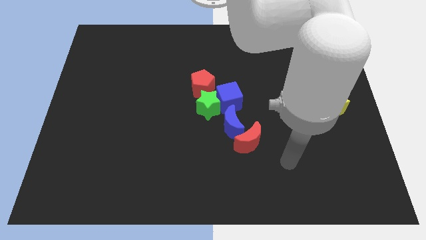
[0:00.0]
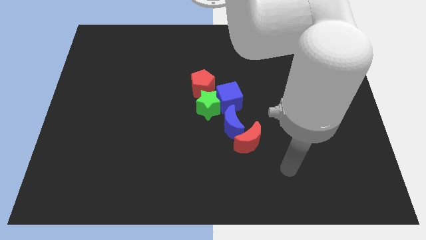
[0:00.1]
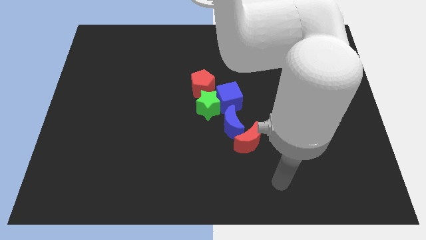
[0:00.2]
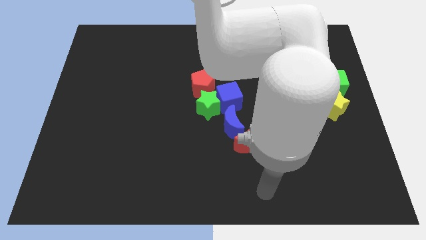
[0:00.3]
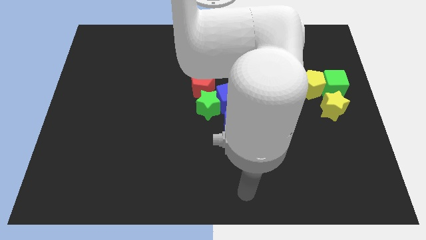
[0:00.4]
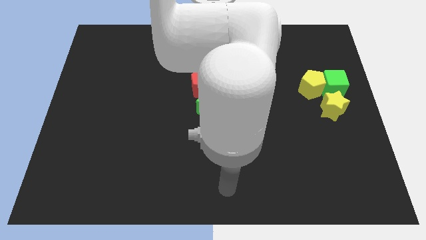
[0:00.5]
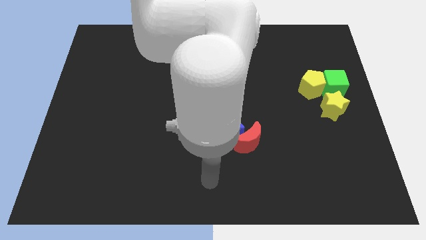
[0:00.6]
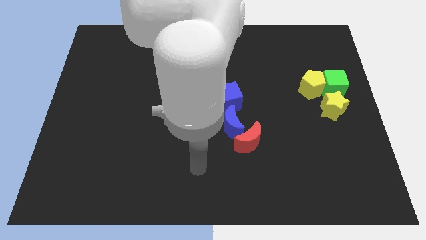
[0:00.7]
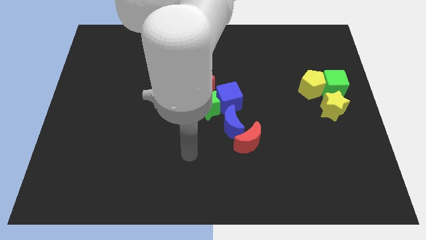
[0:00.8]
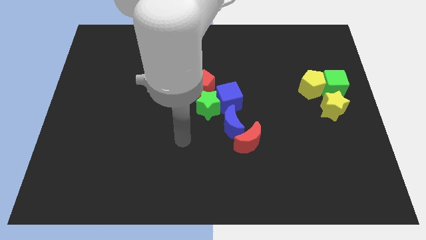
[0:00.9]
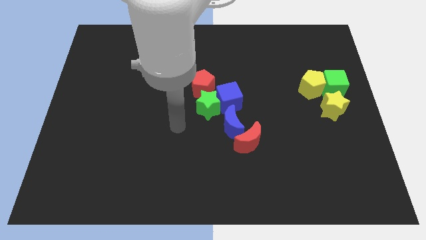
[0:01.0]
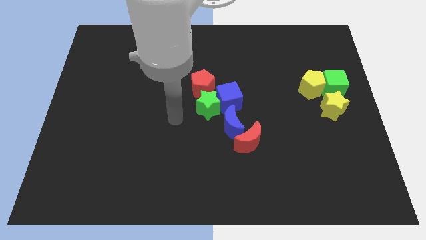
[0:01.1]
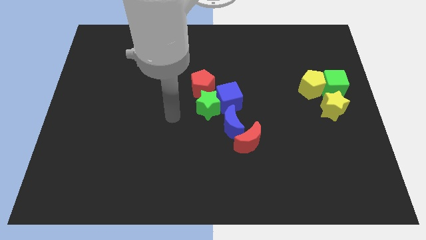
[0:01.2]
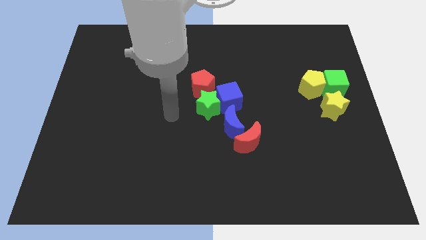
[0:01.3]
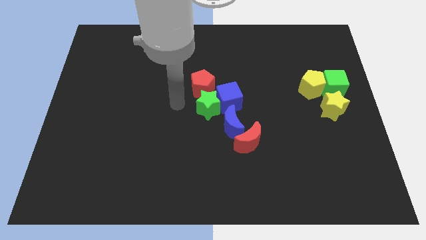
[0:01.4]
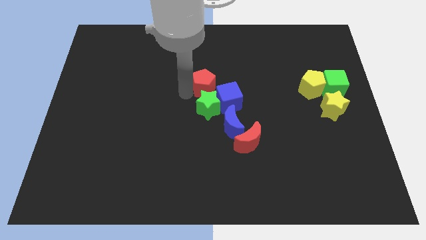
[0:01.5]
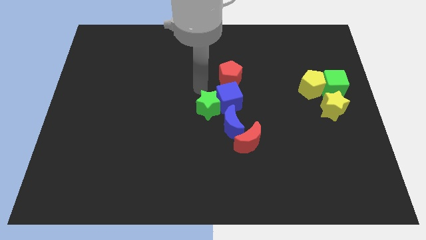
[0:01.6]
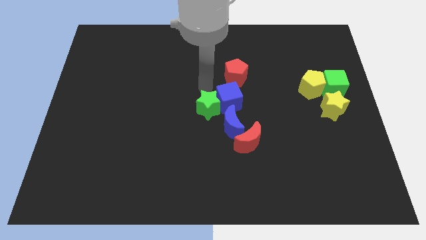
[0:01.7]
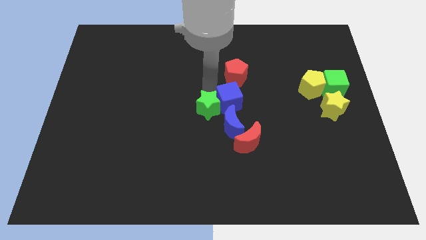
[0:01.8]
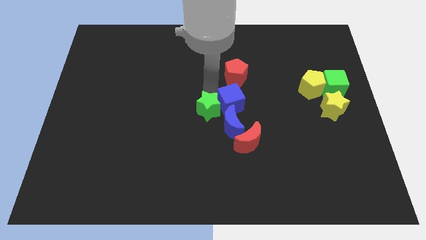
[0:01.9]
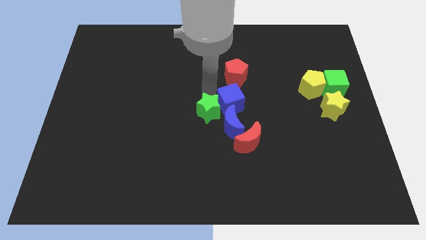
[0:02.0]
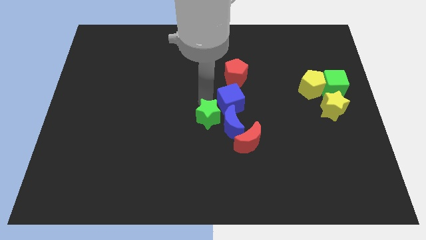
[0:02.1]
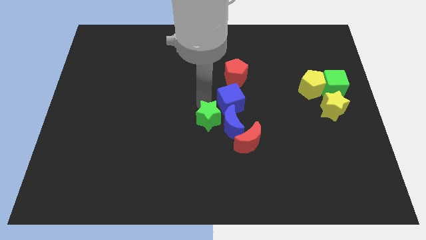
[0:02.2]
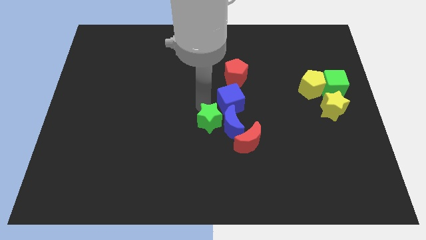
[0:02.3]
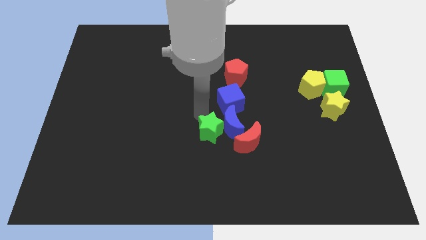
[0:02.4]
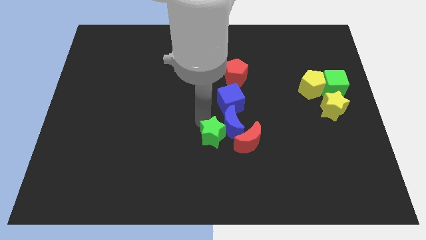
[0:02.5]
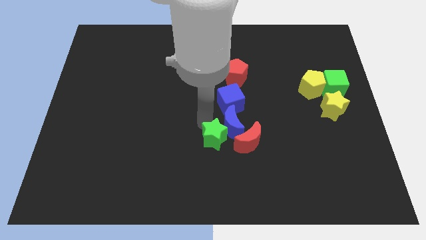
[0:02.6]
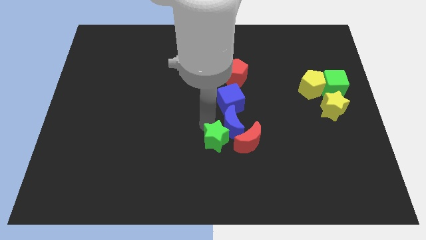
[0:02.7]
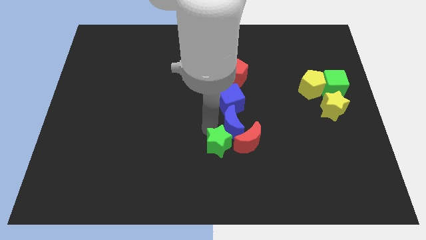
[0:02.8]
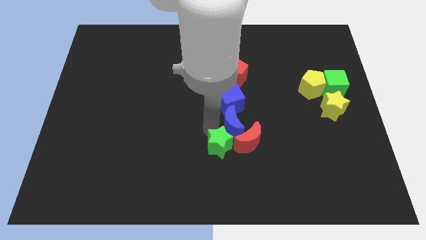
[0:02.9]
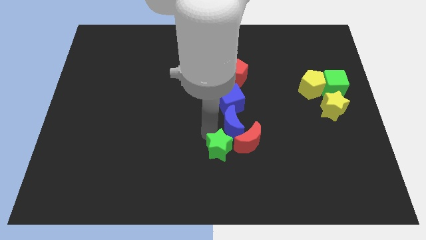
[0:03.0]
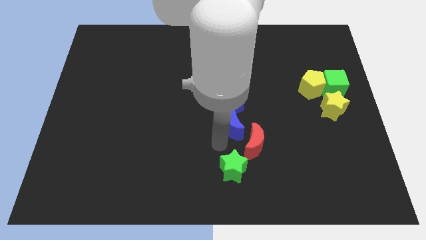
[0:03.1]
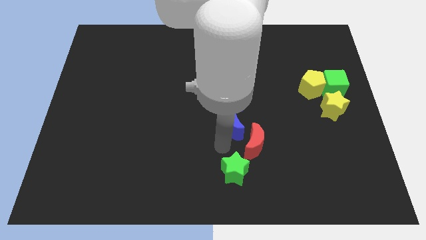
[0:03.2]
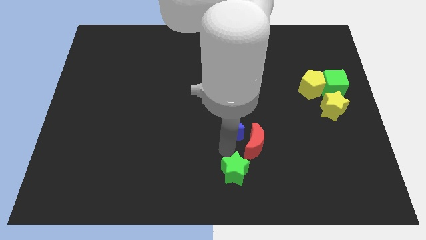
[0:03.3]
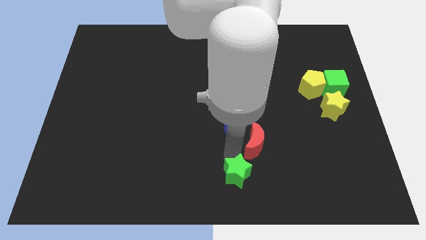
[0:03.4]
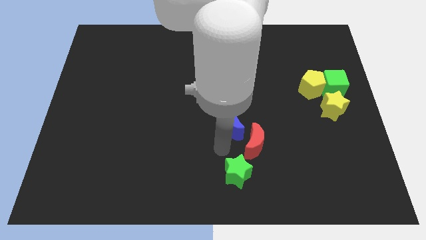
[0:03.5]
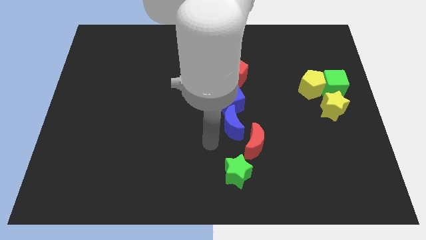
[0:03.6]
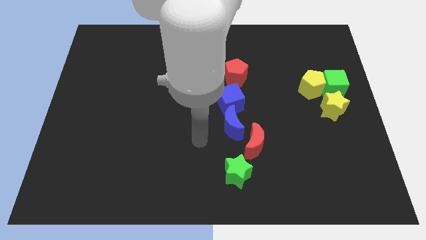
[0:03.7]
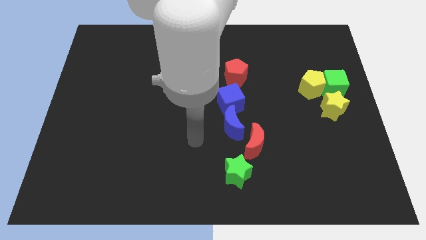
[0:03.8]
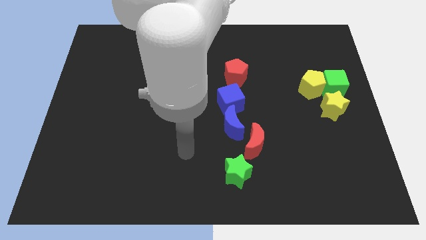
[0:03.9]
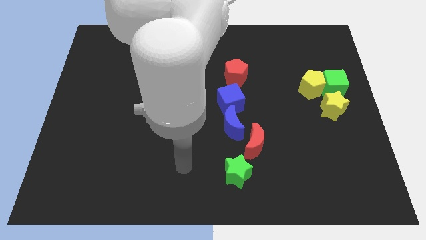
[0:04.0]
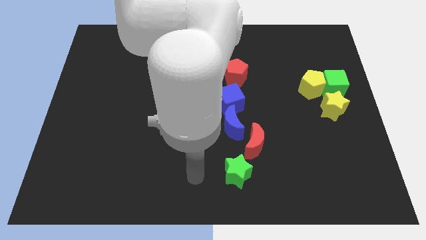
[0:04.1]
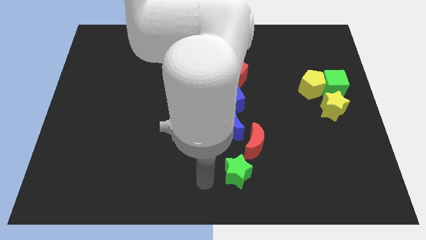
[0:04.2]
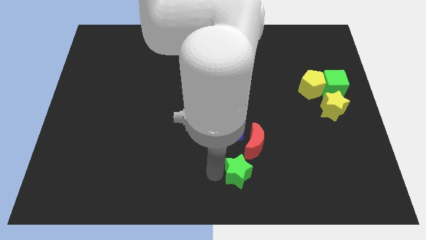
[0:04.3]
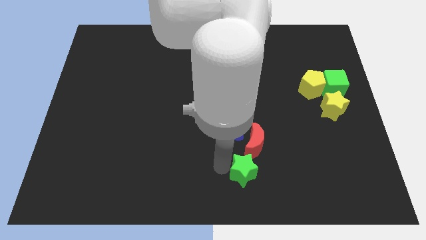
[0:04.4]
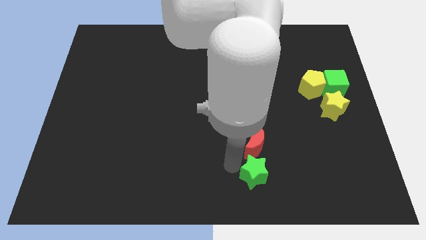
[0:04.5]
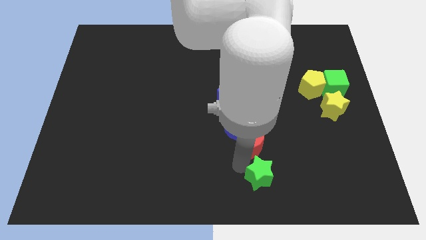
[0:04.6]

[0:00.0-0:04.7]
push the green star below the red crescent

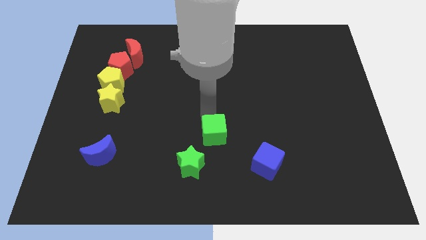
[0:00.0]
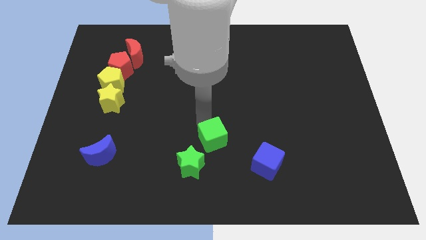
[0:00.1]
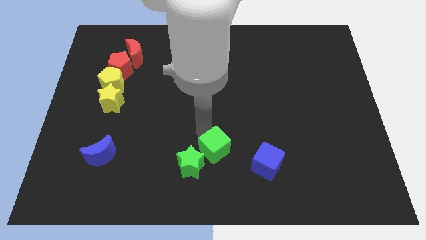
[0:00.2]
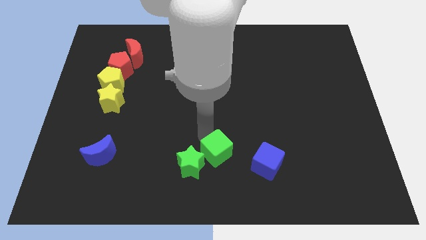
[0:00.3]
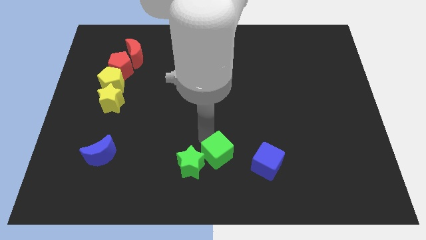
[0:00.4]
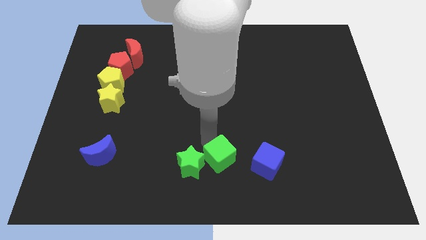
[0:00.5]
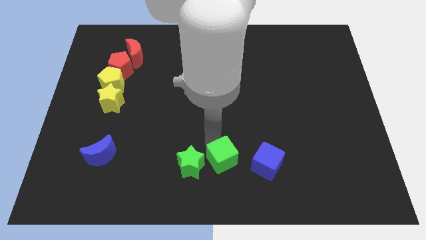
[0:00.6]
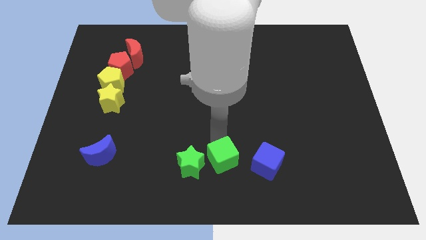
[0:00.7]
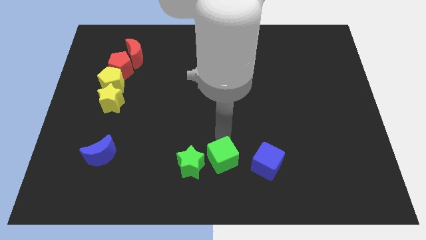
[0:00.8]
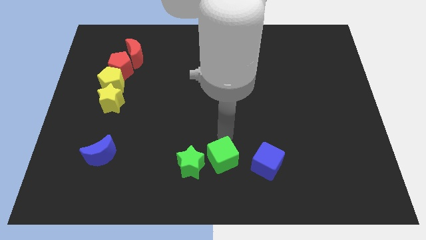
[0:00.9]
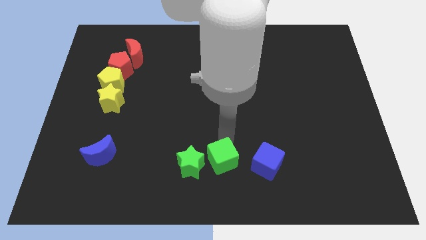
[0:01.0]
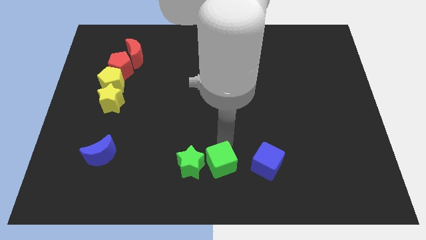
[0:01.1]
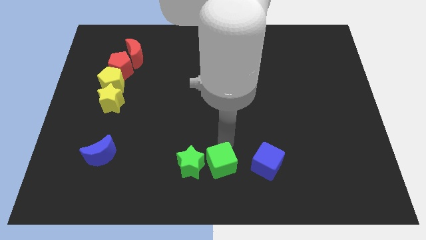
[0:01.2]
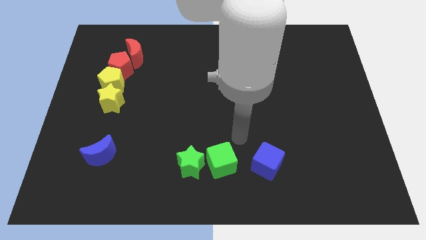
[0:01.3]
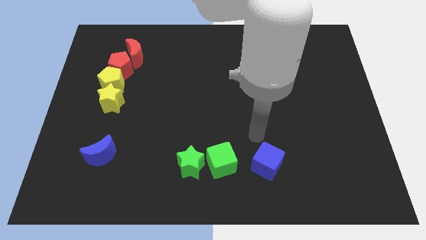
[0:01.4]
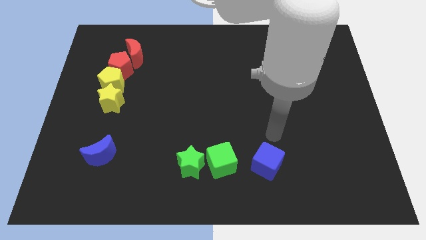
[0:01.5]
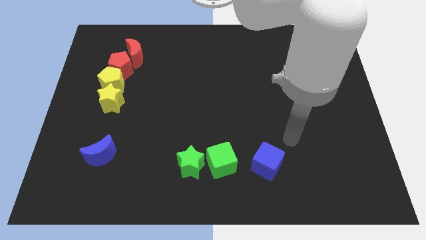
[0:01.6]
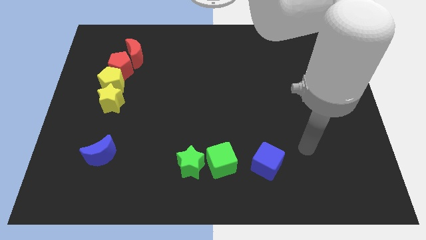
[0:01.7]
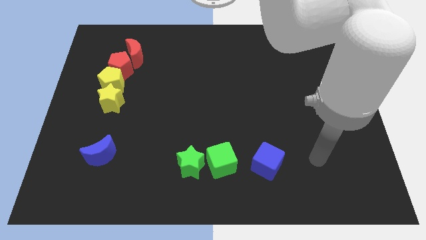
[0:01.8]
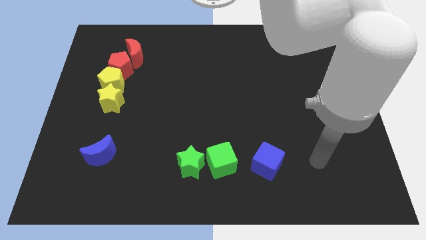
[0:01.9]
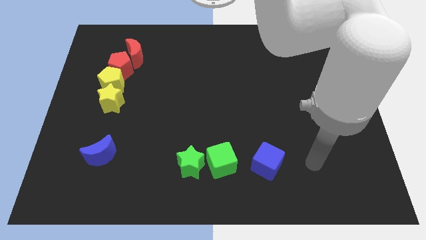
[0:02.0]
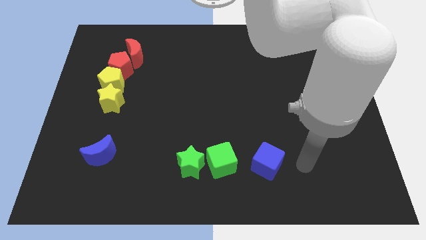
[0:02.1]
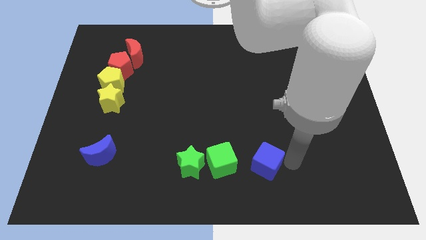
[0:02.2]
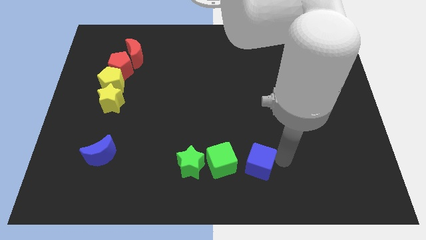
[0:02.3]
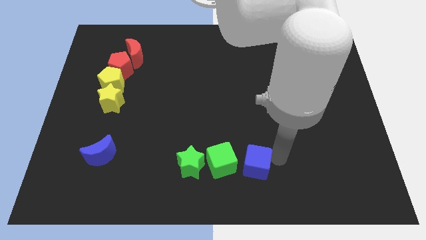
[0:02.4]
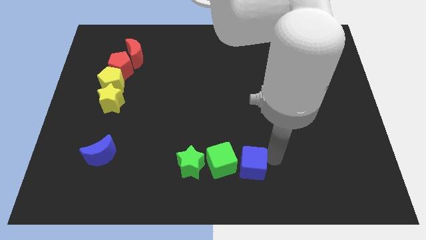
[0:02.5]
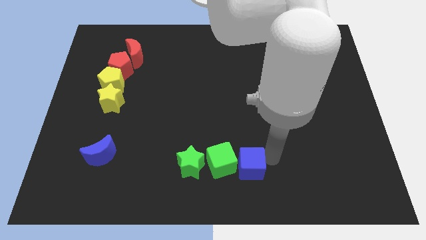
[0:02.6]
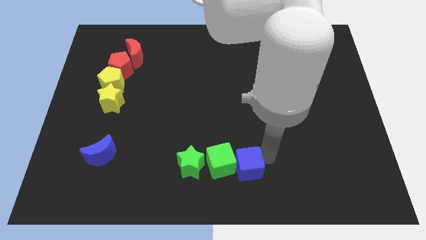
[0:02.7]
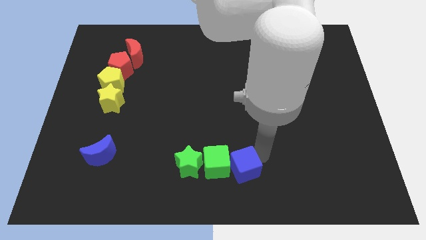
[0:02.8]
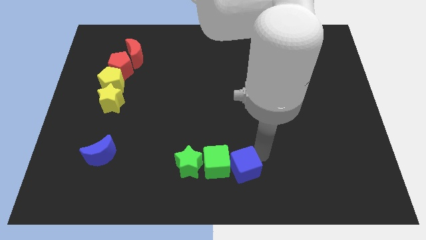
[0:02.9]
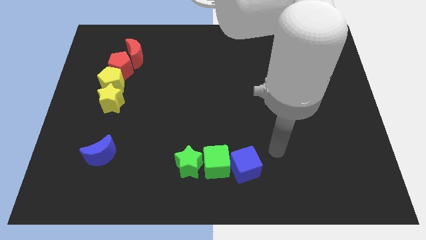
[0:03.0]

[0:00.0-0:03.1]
push the blue cube into the green cube

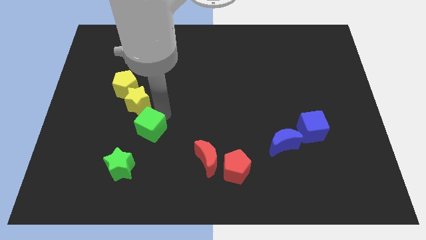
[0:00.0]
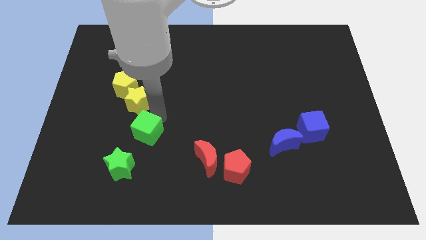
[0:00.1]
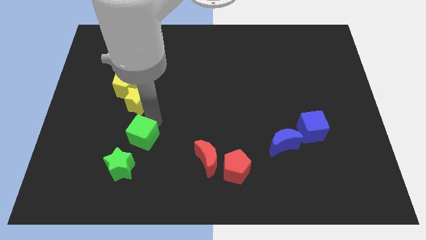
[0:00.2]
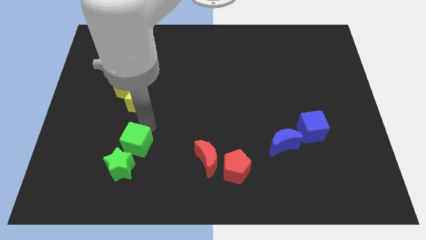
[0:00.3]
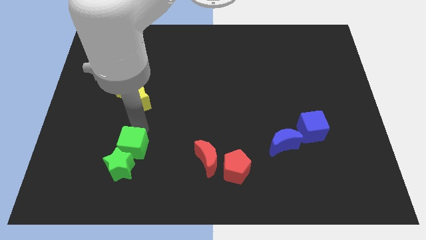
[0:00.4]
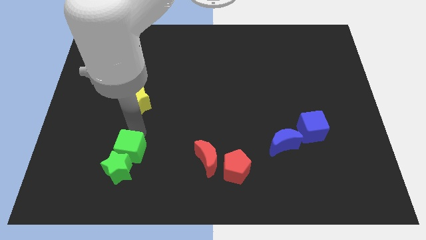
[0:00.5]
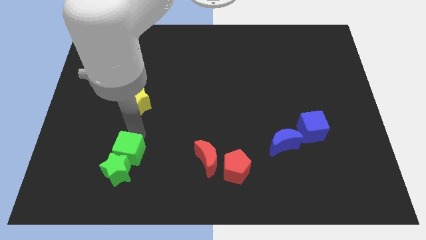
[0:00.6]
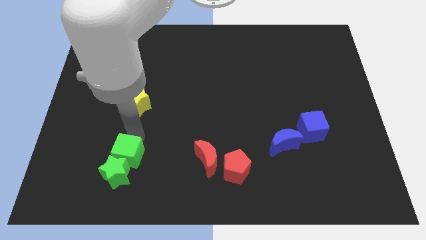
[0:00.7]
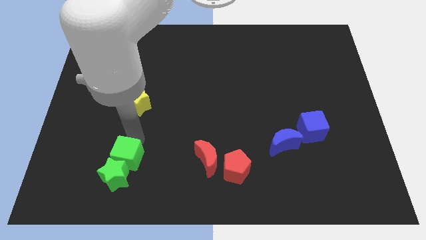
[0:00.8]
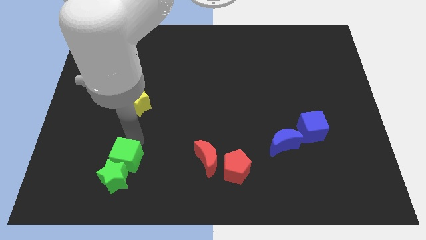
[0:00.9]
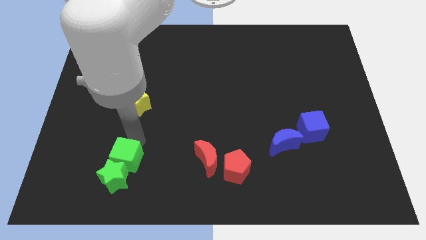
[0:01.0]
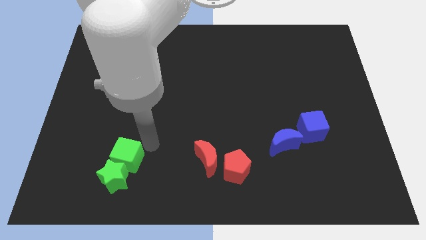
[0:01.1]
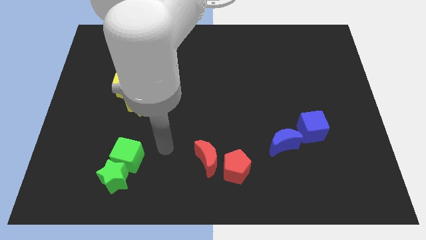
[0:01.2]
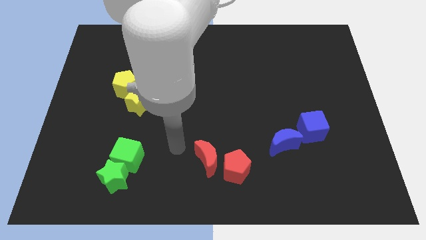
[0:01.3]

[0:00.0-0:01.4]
move the green blocks towards the bottom
